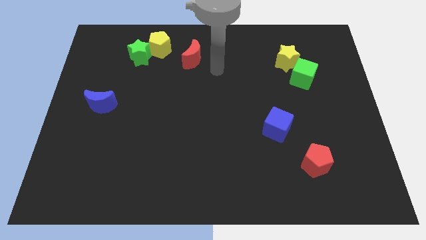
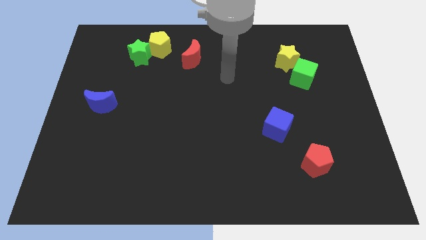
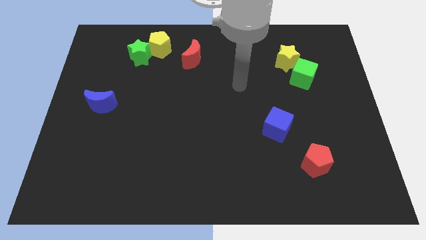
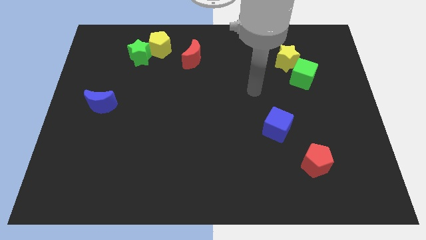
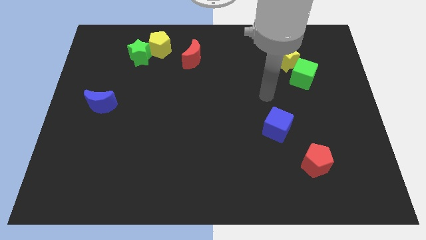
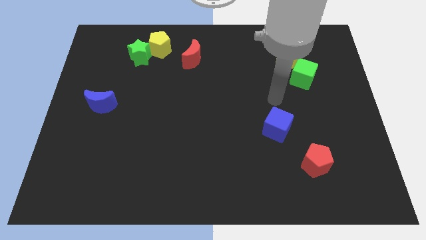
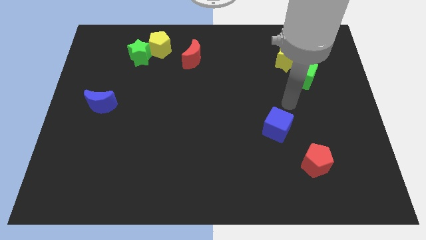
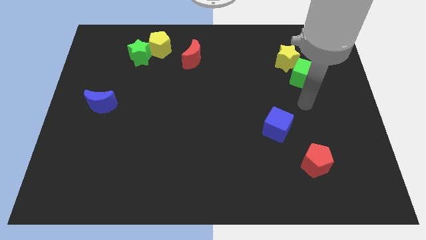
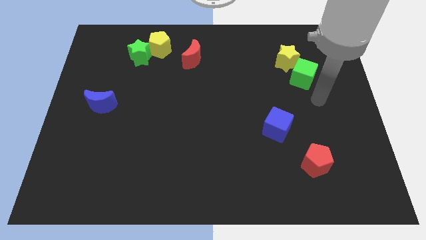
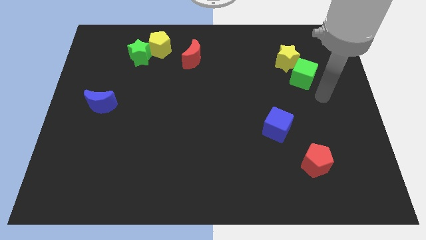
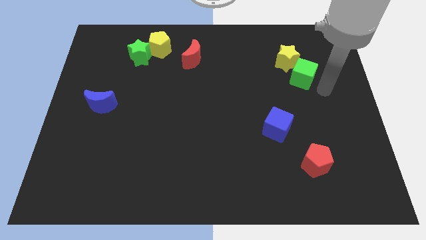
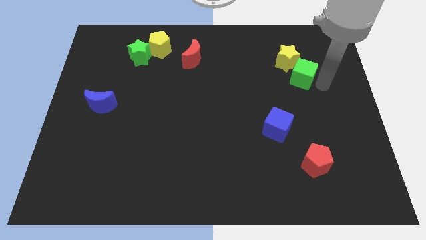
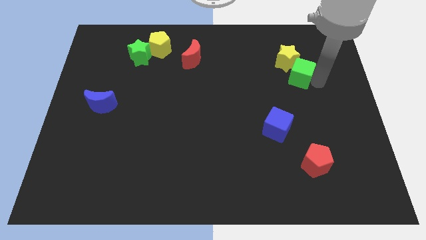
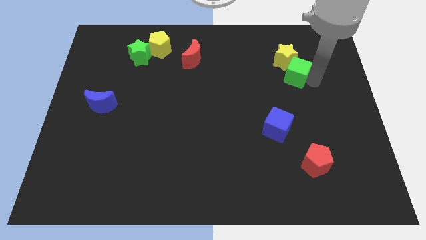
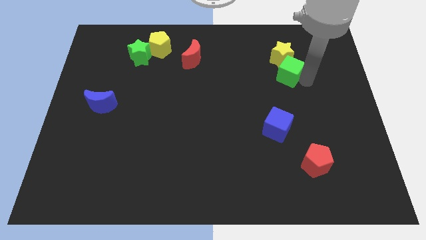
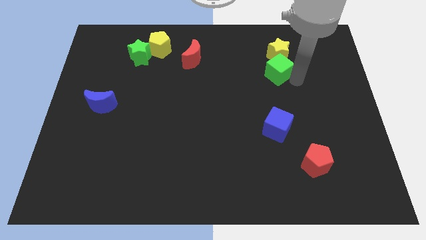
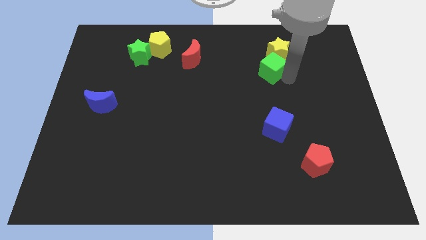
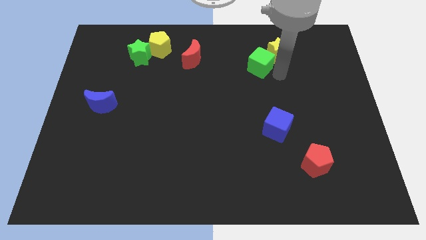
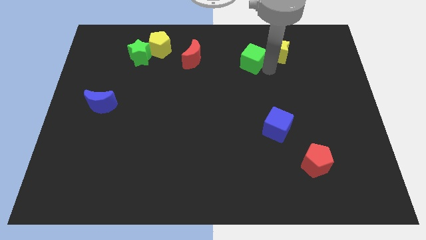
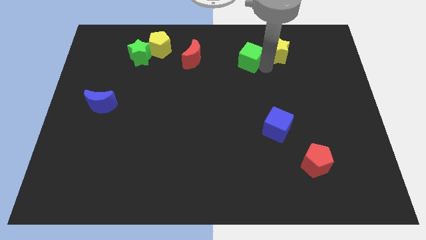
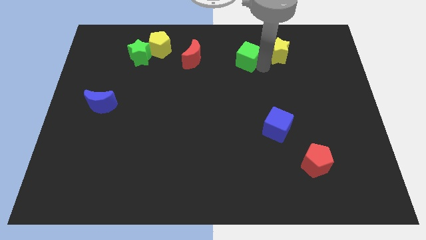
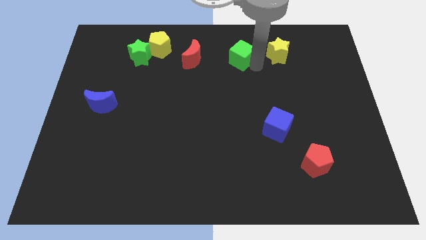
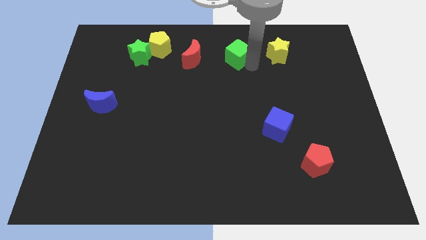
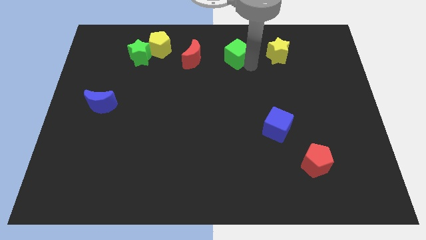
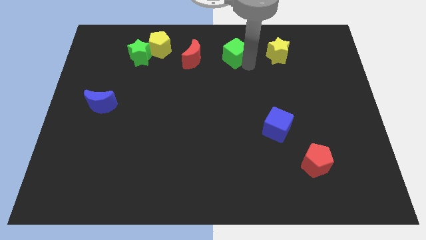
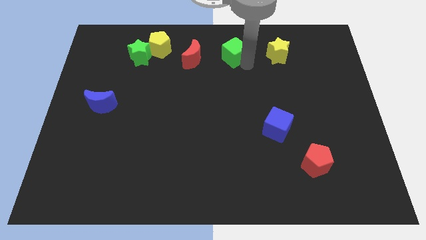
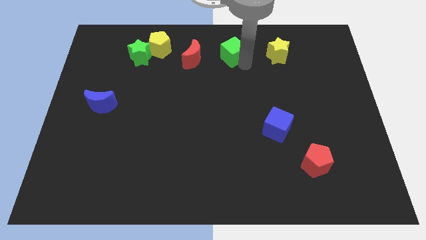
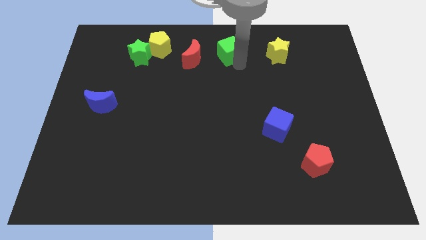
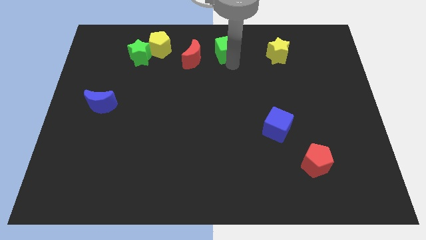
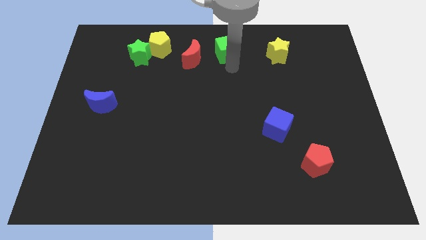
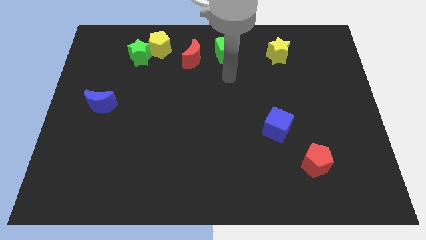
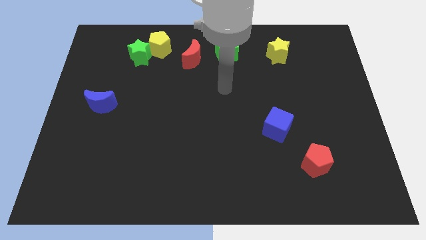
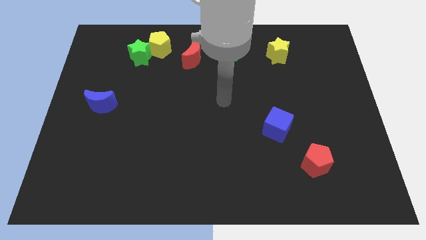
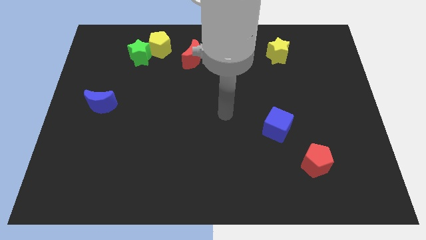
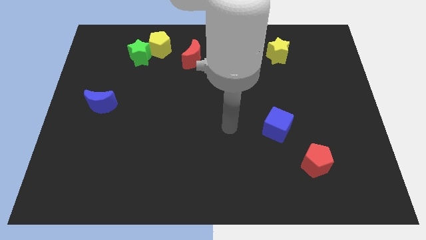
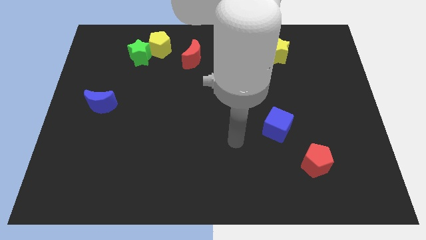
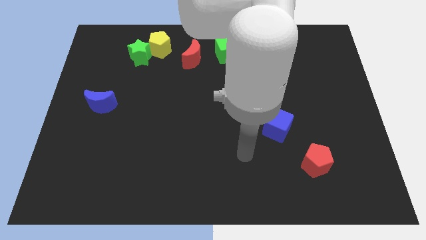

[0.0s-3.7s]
place the green cube to the right of the red crescent

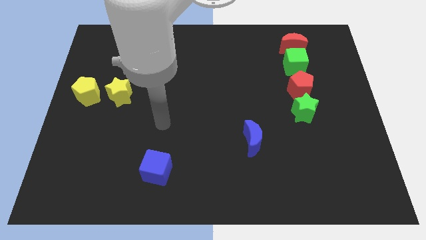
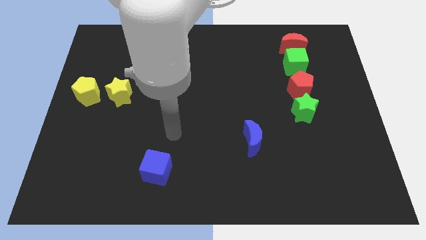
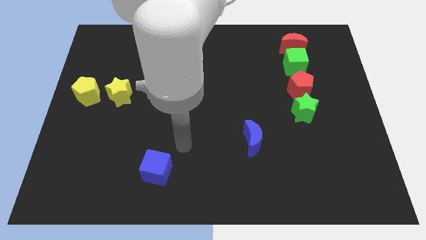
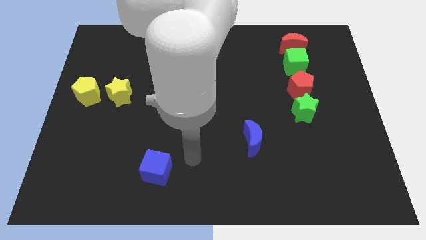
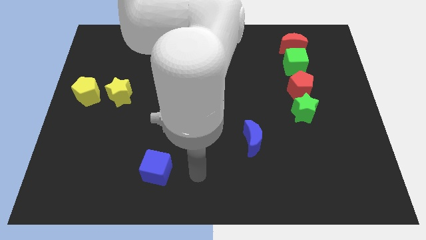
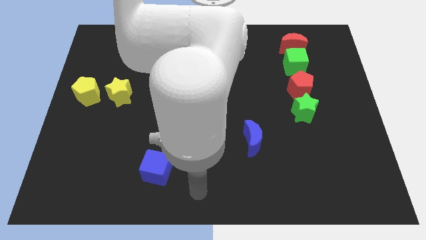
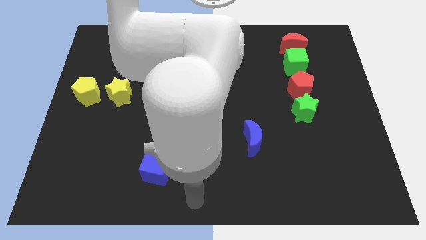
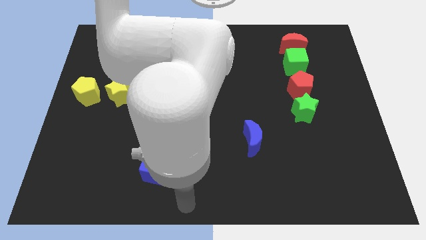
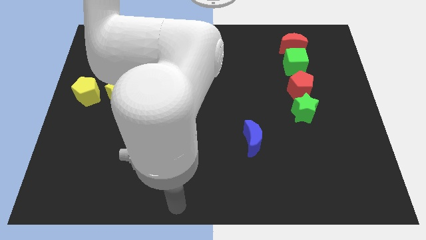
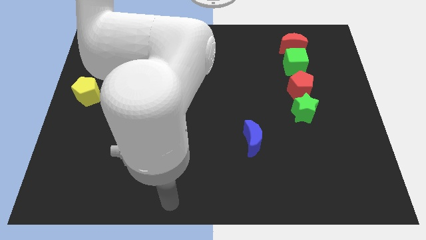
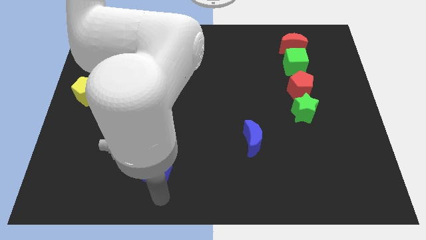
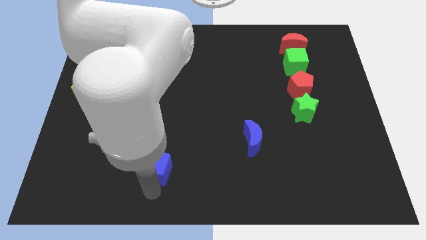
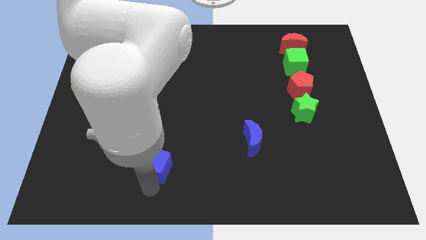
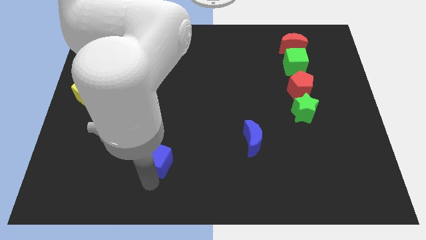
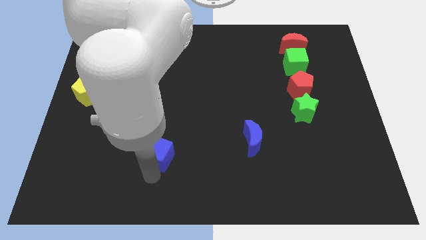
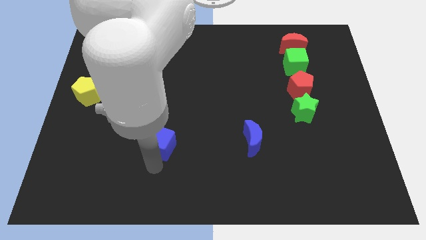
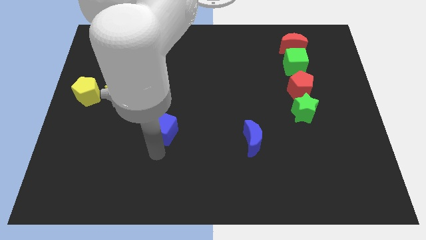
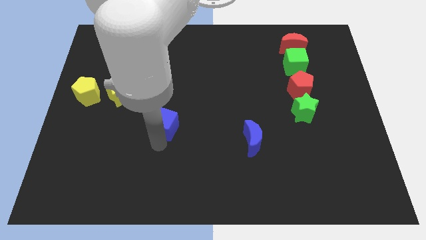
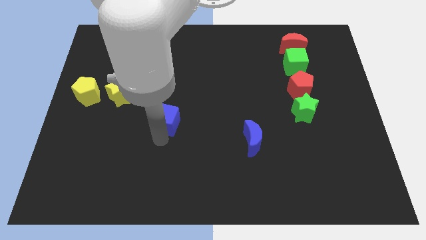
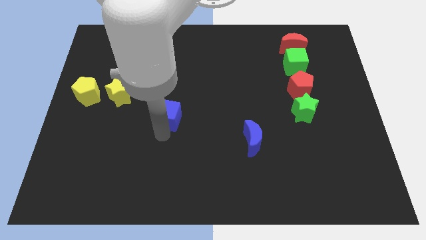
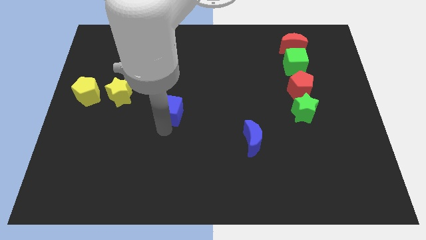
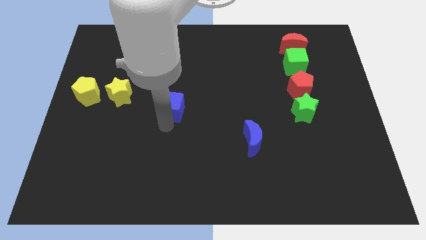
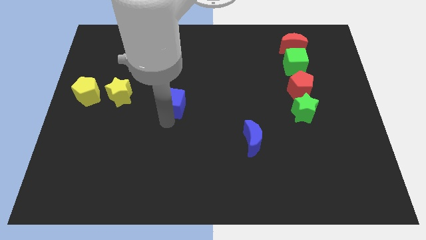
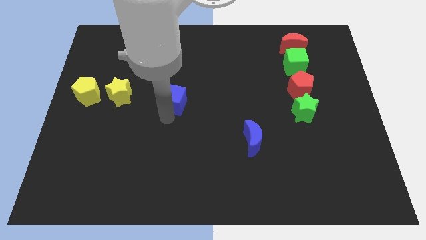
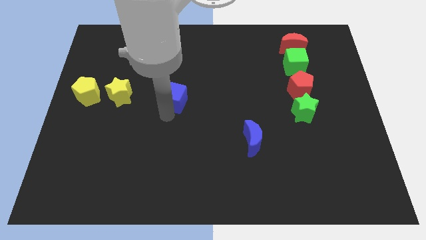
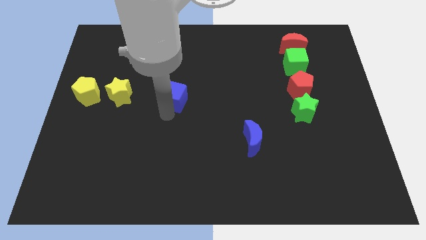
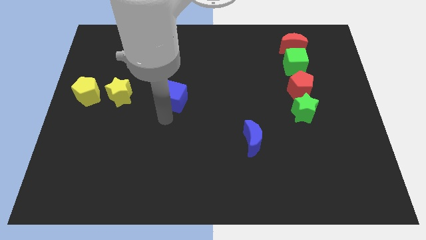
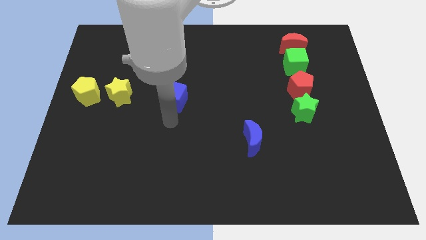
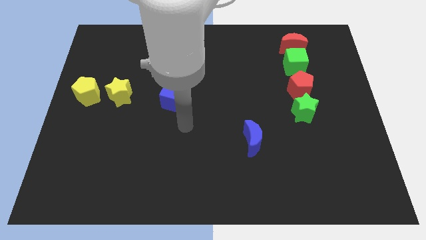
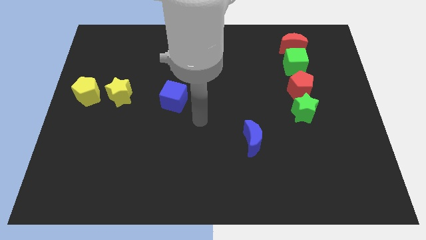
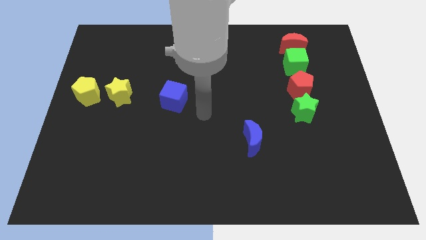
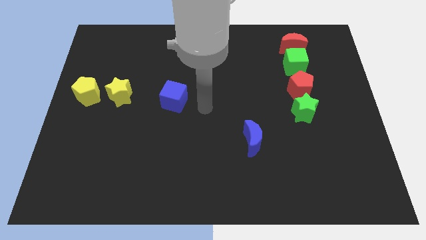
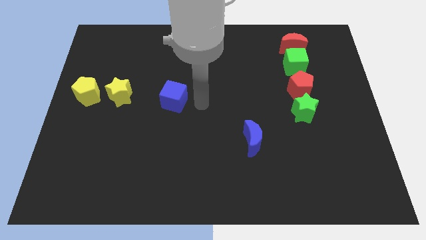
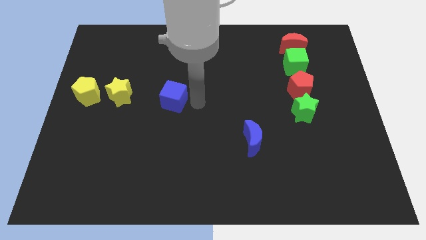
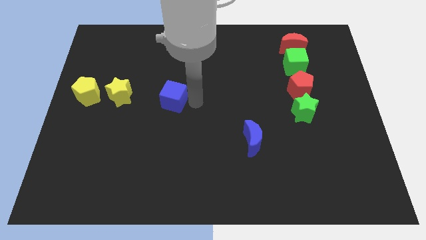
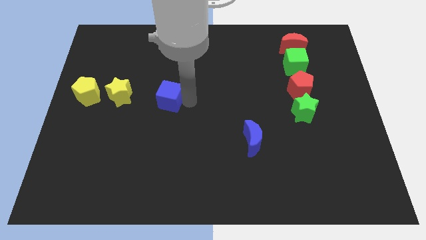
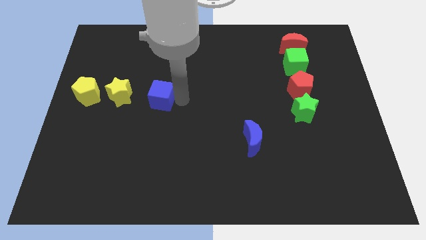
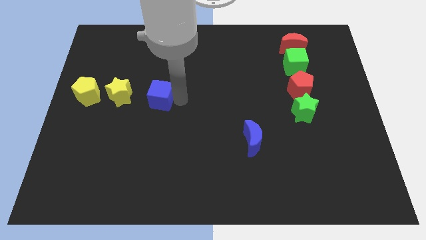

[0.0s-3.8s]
push the blue cube to the right of the yellow star

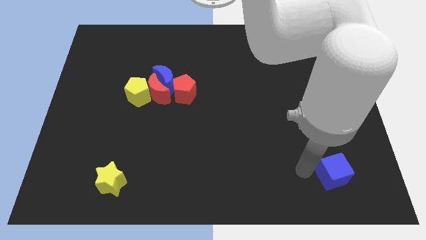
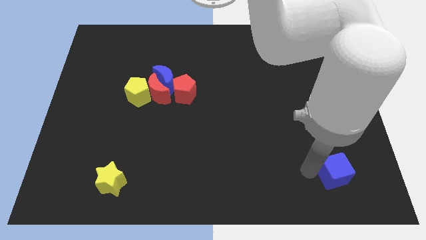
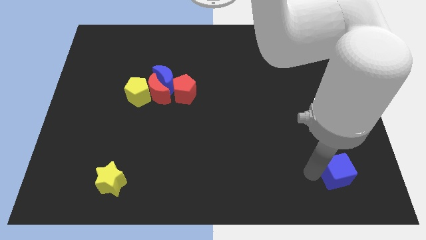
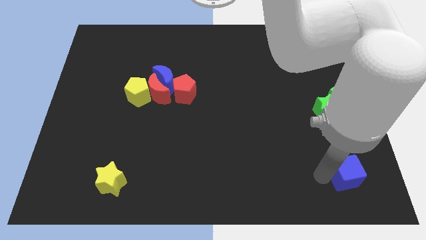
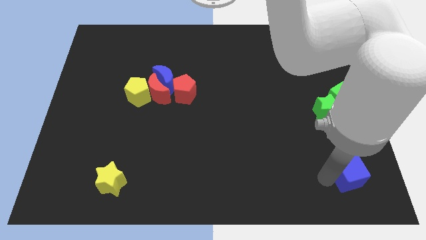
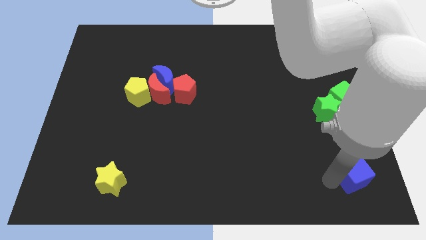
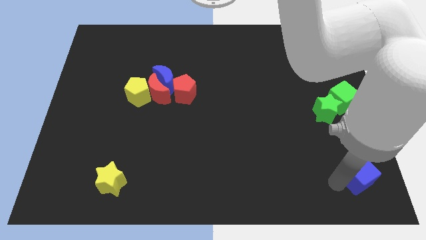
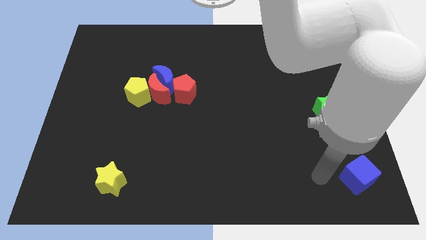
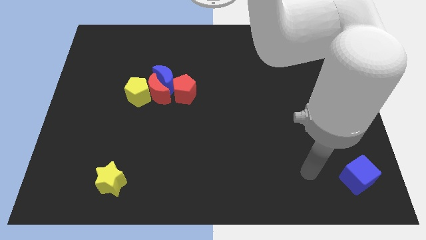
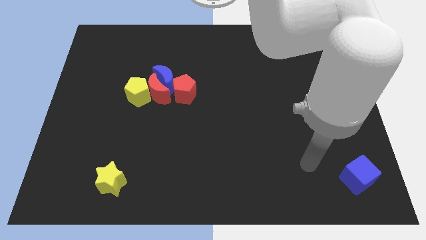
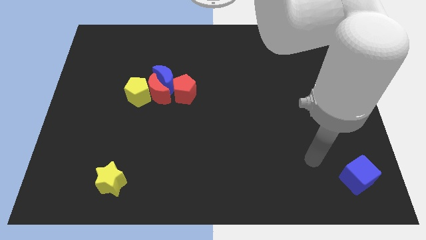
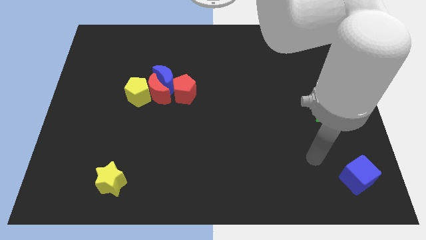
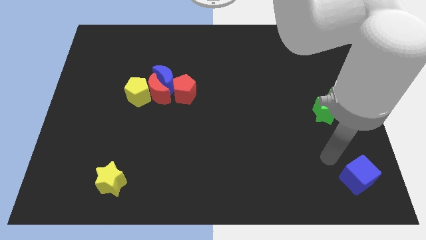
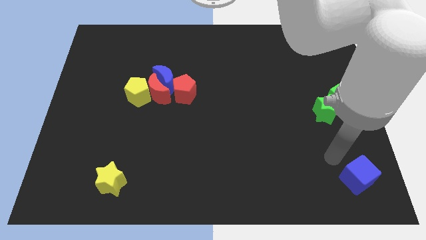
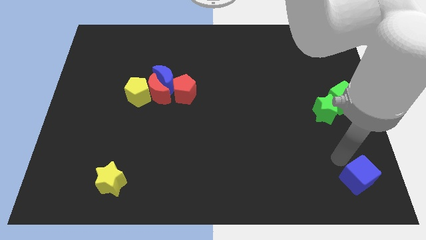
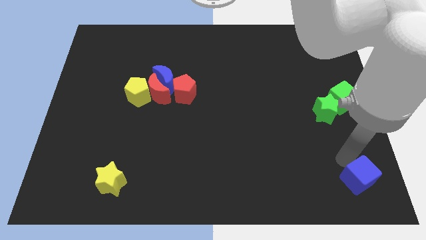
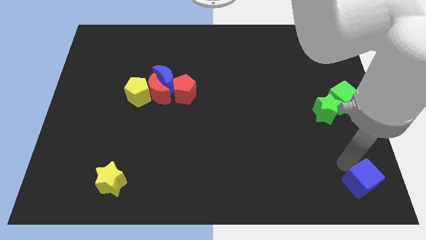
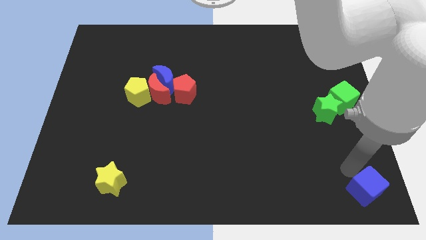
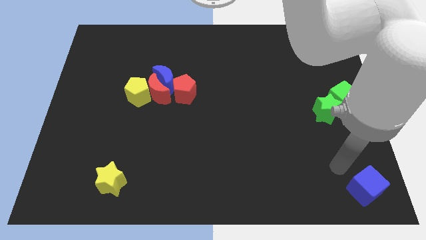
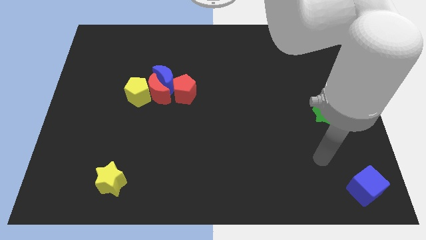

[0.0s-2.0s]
push the blue cube to the bottom right corner
